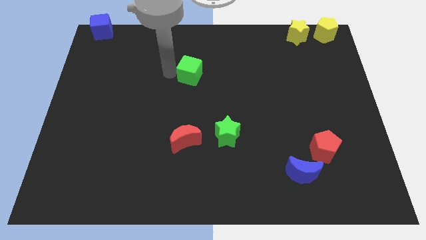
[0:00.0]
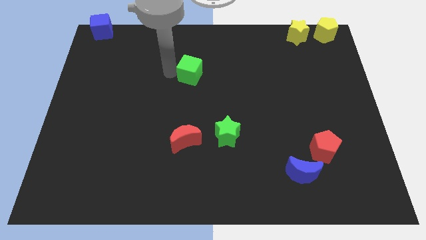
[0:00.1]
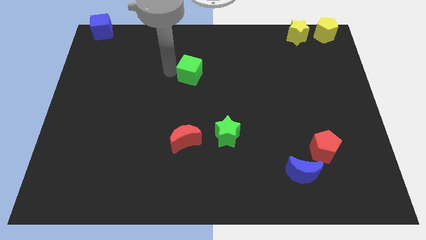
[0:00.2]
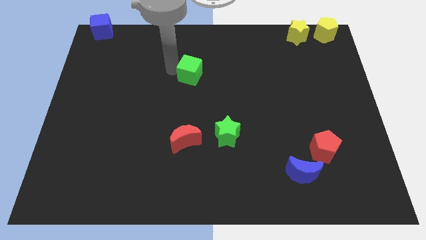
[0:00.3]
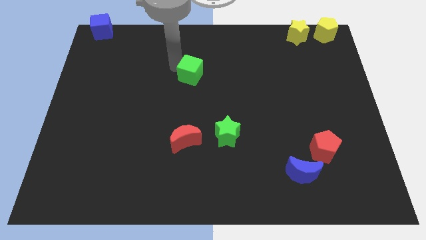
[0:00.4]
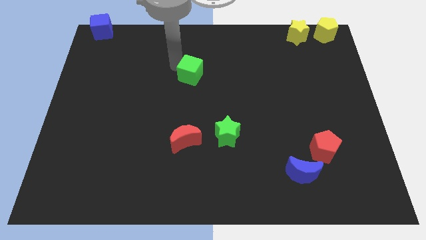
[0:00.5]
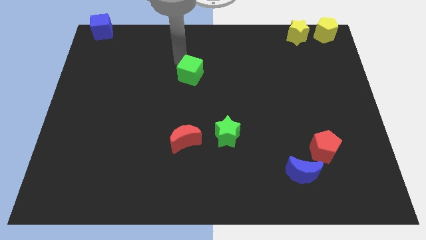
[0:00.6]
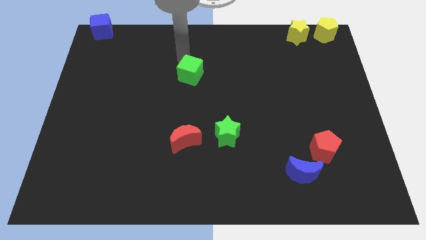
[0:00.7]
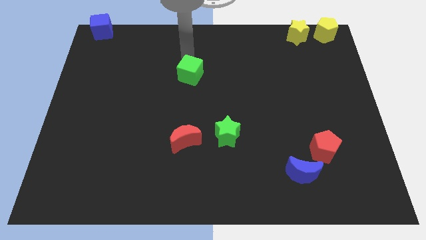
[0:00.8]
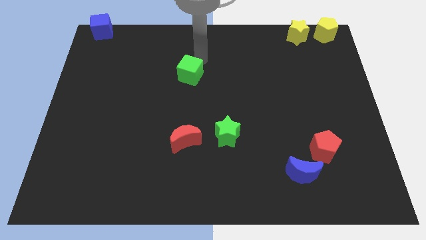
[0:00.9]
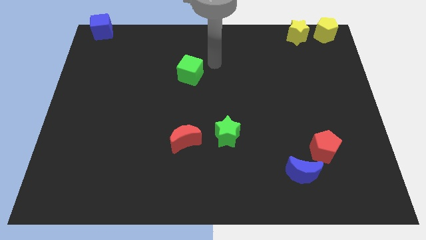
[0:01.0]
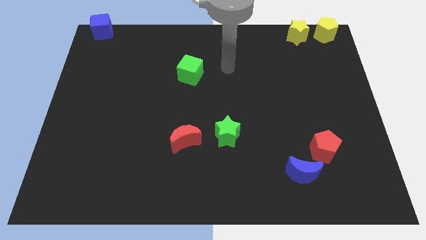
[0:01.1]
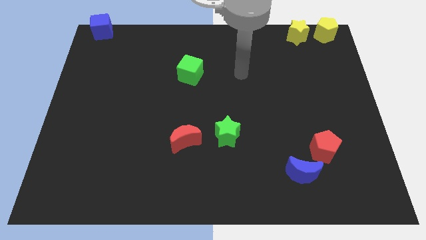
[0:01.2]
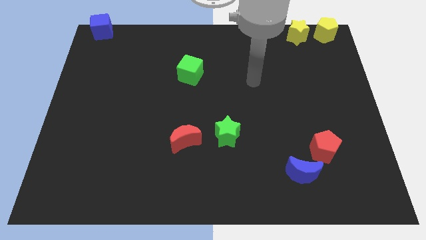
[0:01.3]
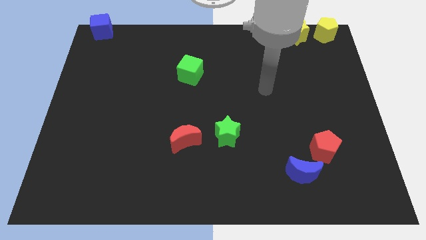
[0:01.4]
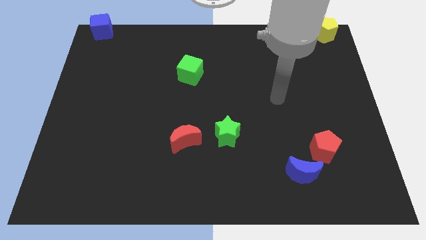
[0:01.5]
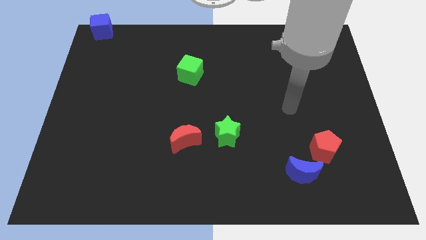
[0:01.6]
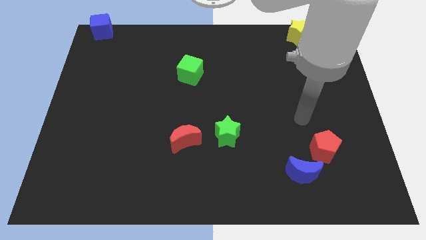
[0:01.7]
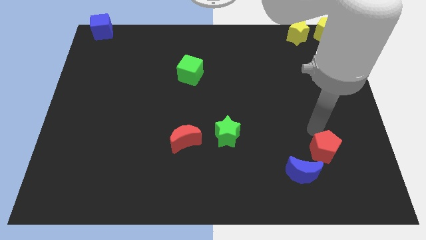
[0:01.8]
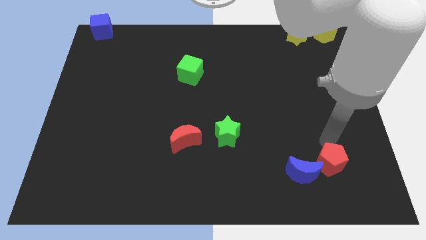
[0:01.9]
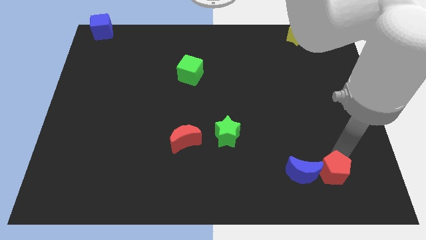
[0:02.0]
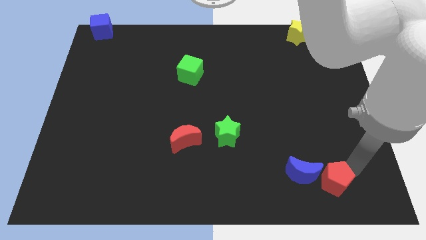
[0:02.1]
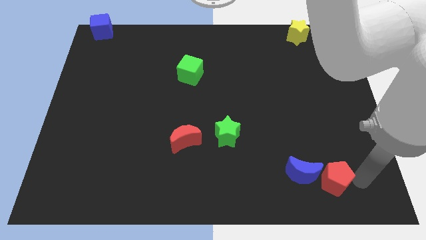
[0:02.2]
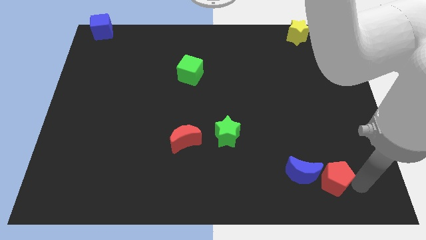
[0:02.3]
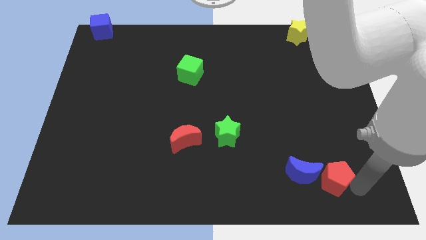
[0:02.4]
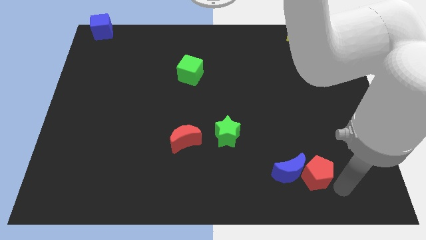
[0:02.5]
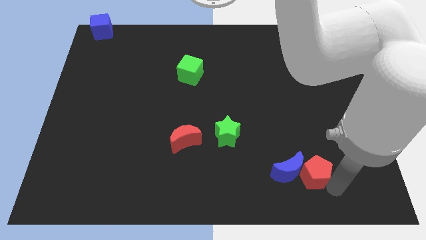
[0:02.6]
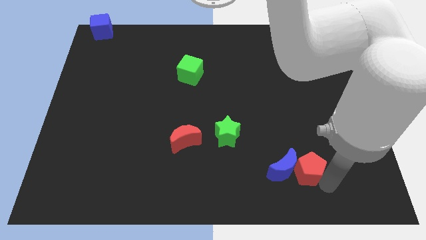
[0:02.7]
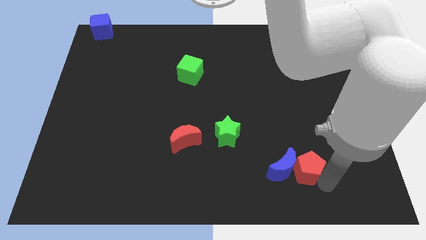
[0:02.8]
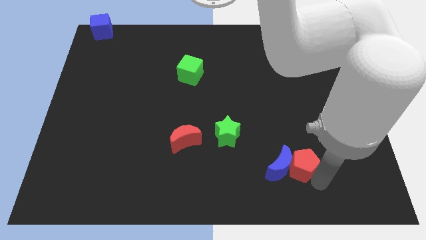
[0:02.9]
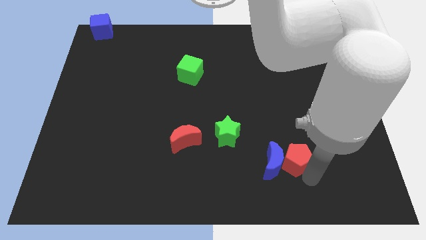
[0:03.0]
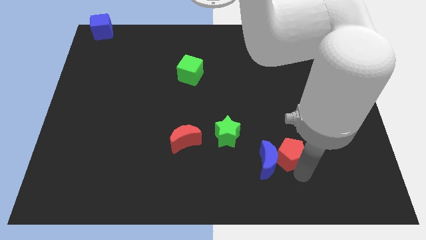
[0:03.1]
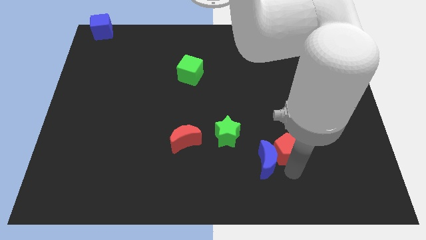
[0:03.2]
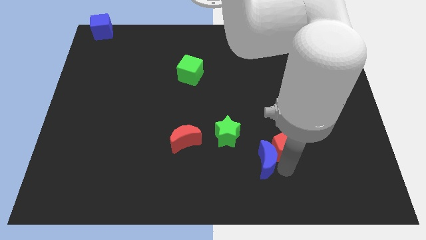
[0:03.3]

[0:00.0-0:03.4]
push the red pentagon along with the blue crescent slightly to the left

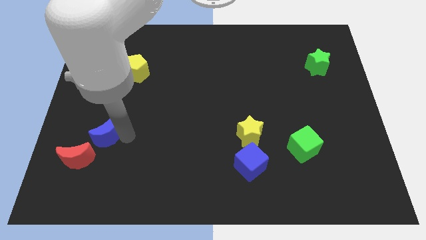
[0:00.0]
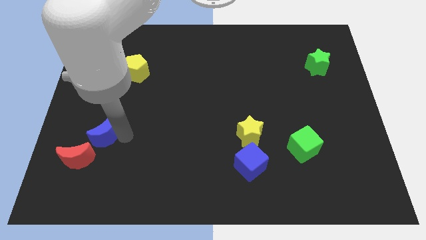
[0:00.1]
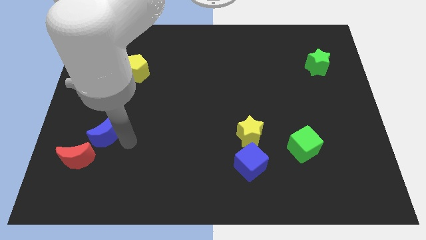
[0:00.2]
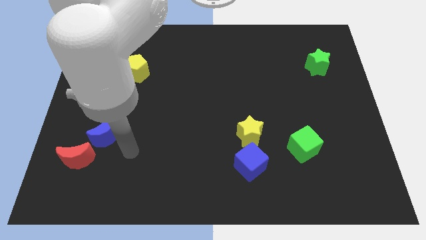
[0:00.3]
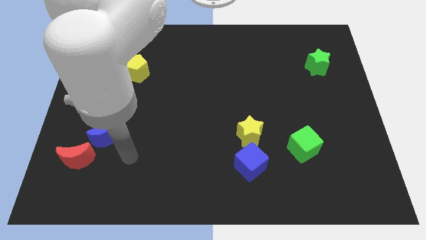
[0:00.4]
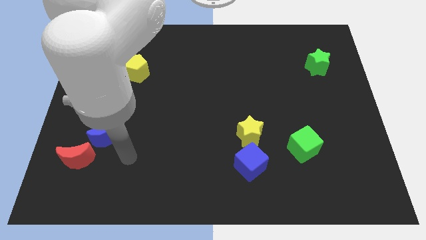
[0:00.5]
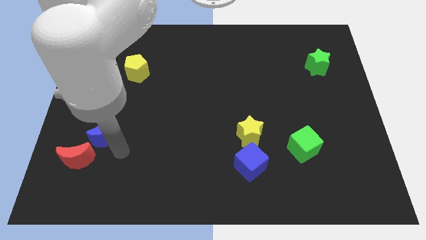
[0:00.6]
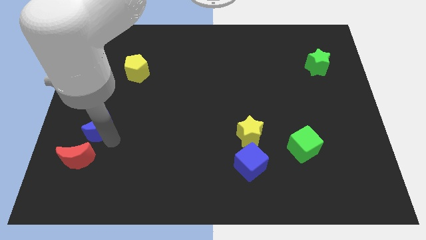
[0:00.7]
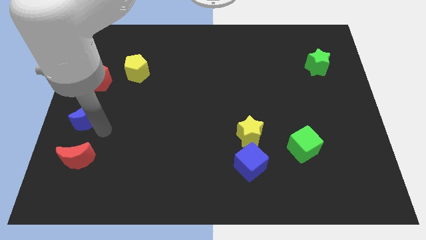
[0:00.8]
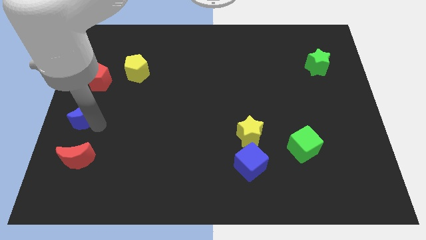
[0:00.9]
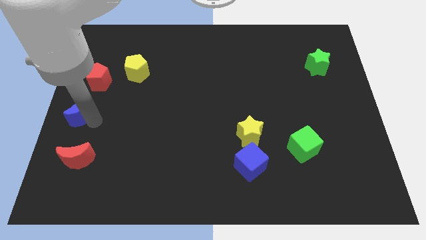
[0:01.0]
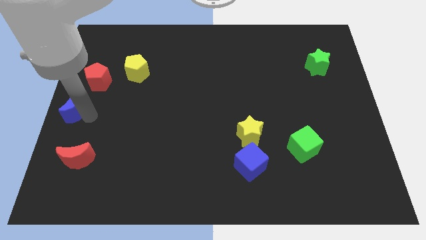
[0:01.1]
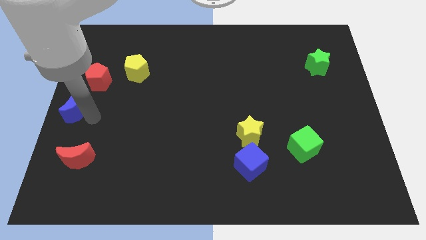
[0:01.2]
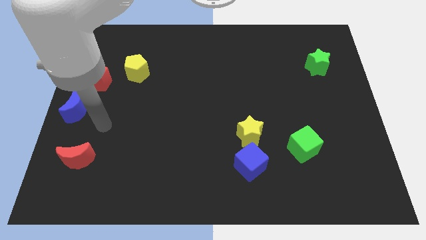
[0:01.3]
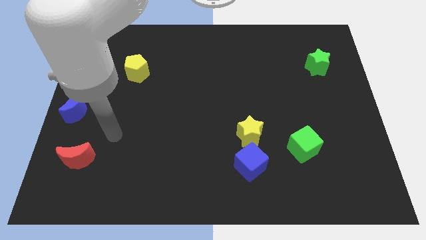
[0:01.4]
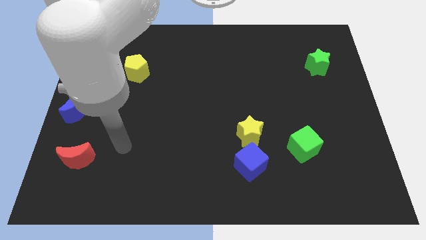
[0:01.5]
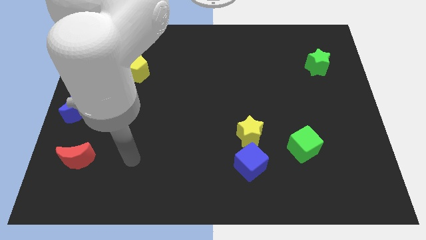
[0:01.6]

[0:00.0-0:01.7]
move the blue crescent towards the left center of the board

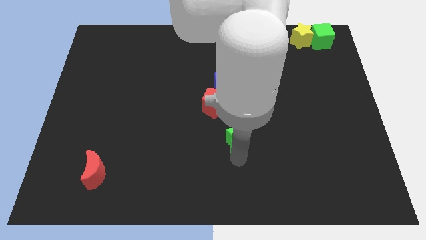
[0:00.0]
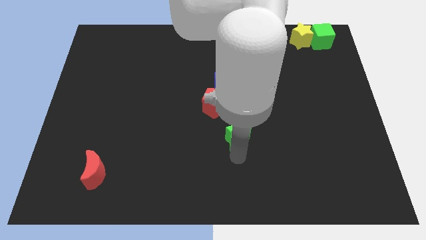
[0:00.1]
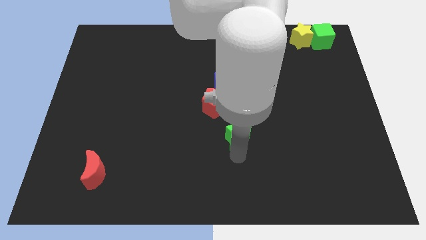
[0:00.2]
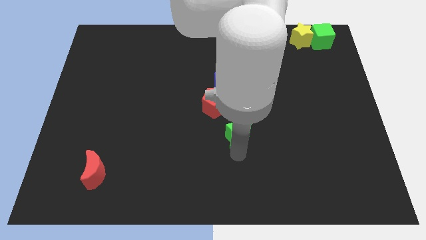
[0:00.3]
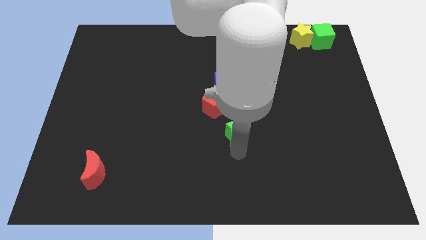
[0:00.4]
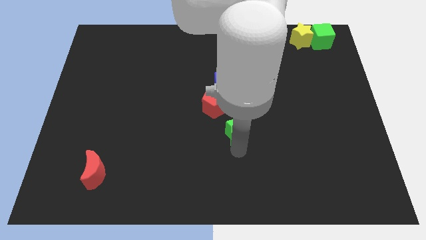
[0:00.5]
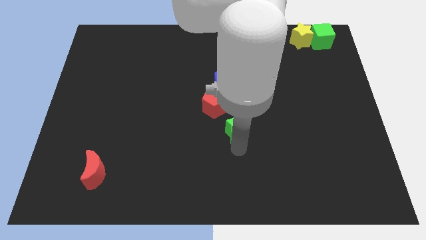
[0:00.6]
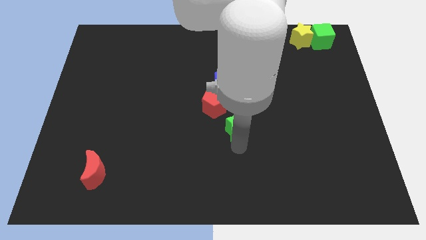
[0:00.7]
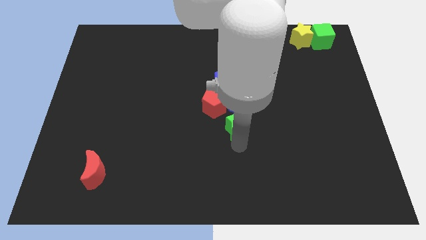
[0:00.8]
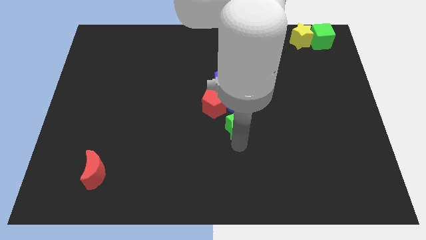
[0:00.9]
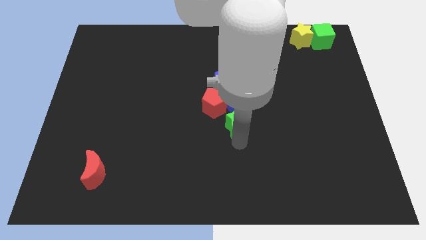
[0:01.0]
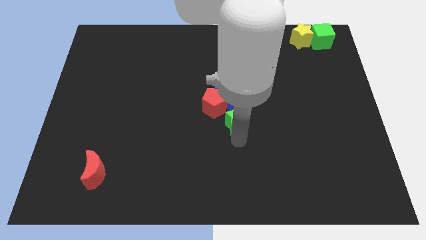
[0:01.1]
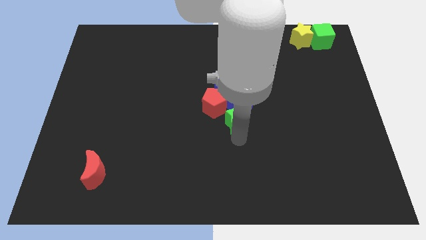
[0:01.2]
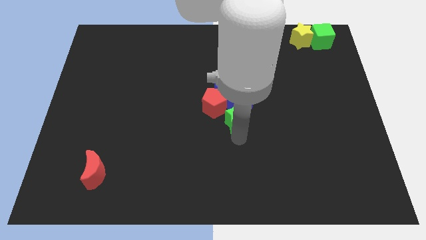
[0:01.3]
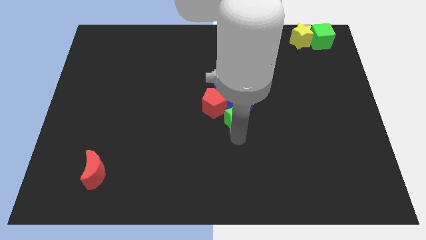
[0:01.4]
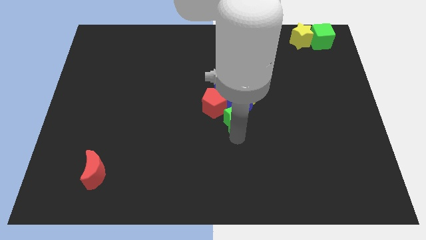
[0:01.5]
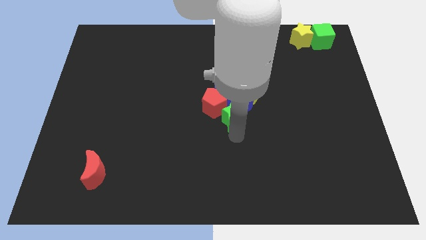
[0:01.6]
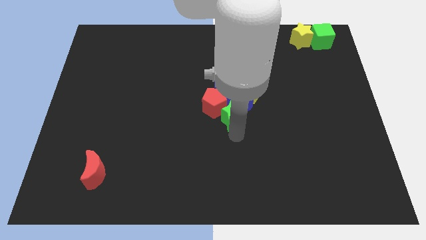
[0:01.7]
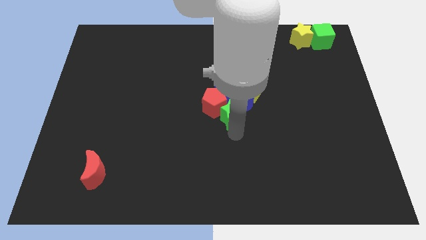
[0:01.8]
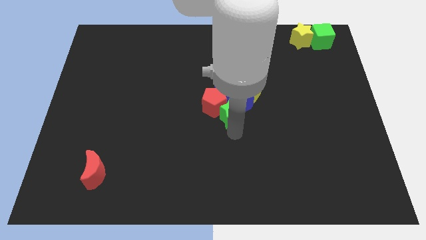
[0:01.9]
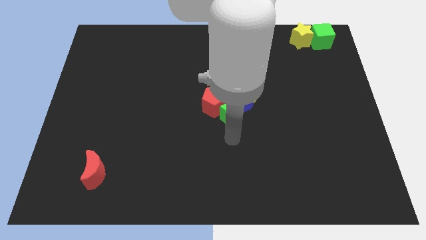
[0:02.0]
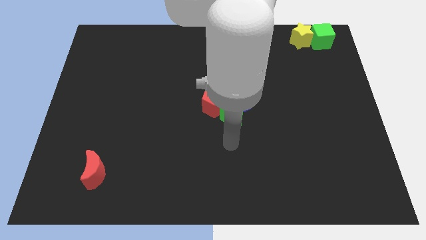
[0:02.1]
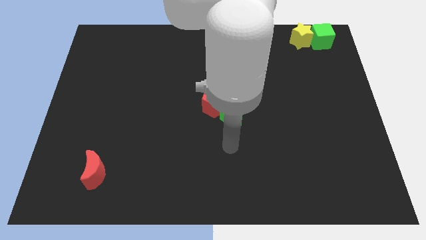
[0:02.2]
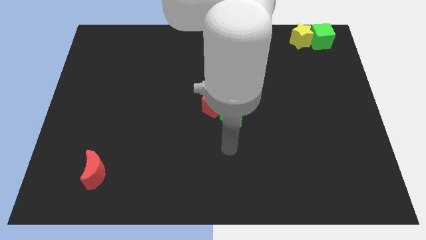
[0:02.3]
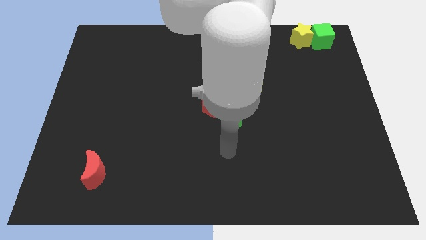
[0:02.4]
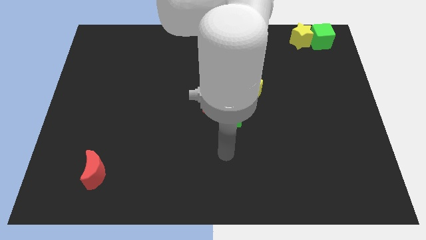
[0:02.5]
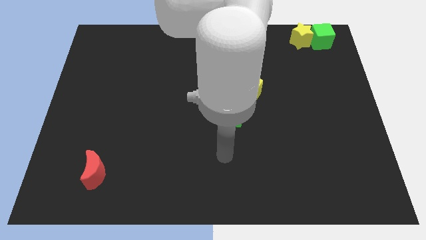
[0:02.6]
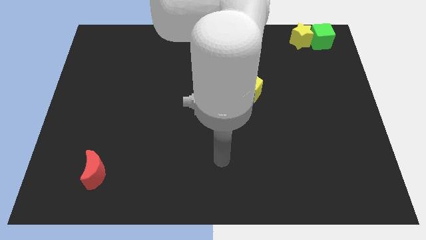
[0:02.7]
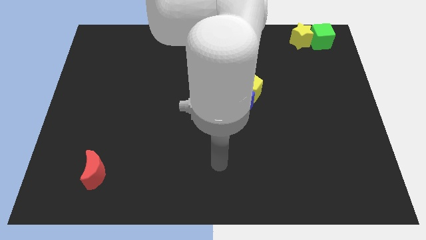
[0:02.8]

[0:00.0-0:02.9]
push green star into red pentagon

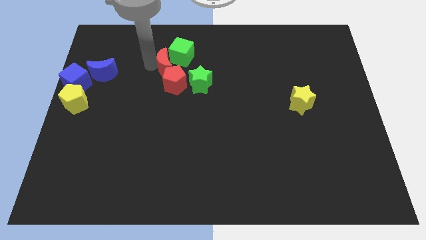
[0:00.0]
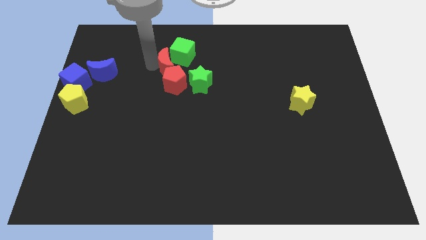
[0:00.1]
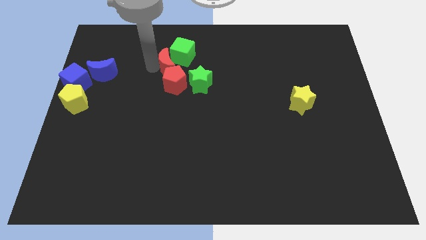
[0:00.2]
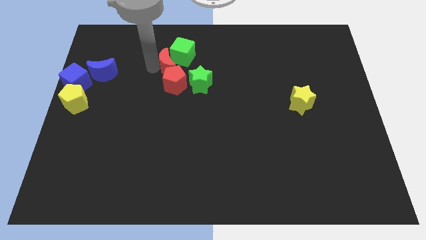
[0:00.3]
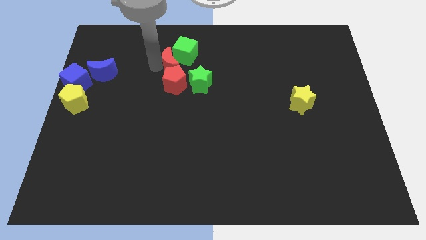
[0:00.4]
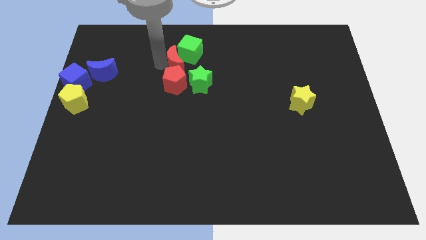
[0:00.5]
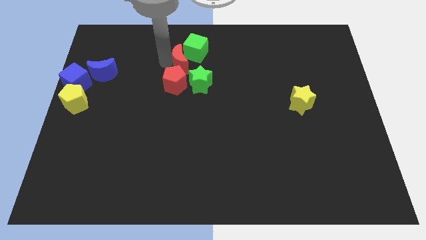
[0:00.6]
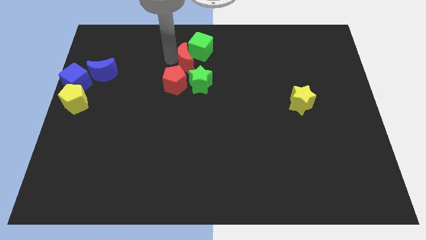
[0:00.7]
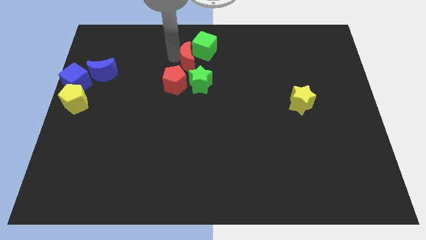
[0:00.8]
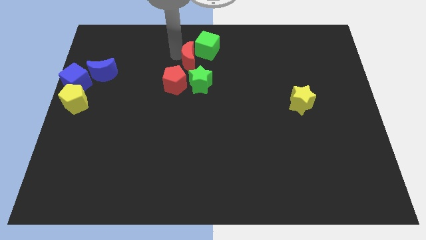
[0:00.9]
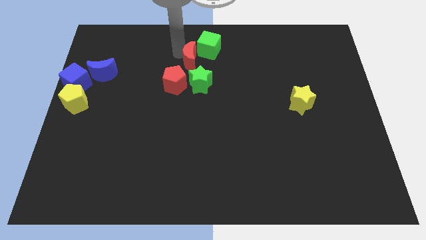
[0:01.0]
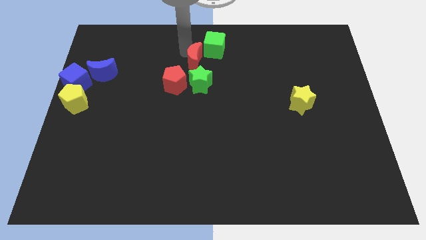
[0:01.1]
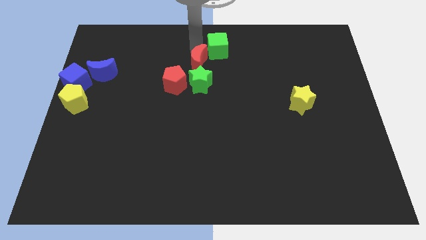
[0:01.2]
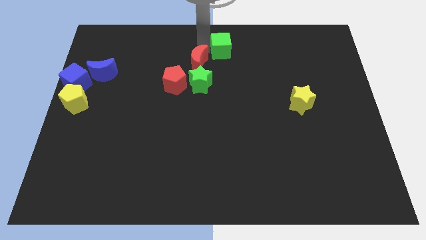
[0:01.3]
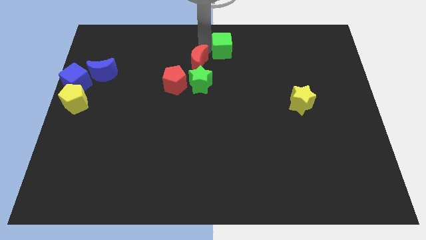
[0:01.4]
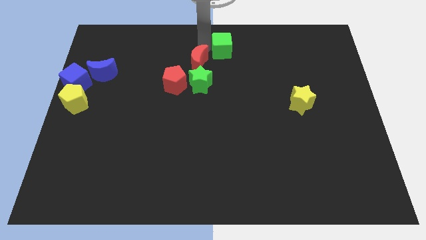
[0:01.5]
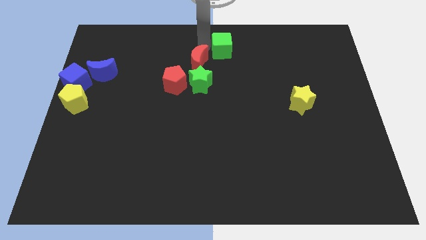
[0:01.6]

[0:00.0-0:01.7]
push the red crescent into green cube
